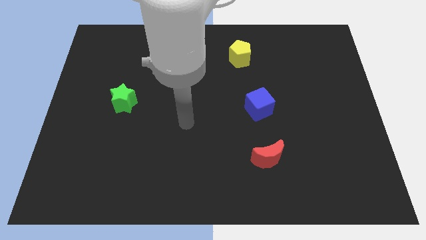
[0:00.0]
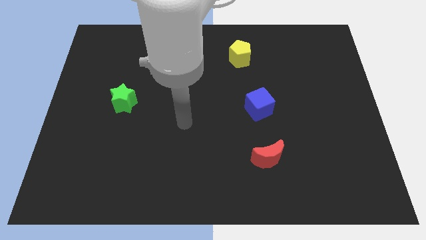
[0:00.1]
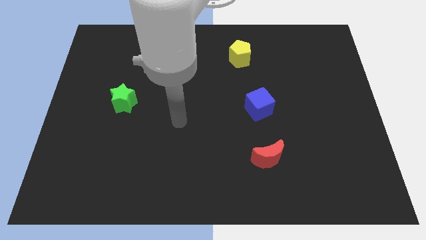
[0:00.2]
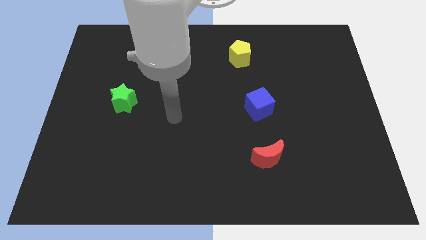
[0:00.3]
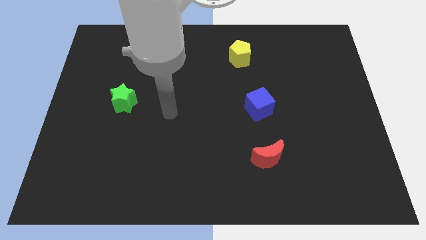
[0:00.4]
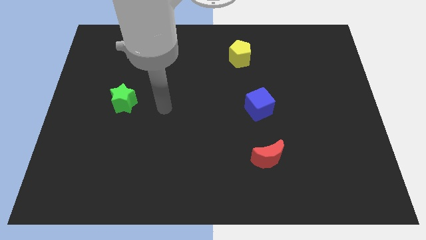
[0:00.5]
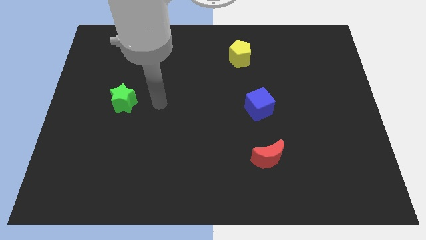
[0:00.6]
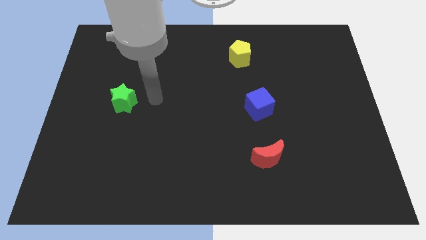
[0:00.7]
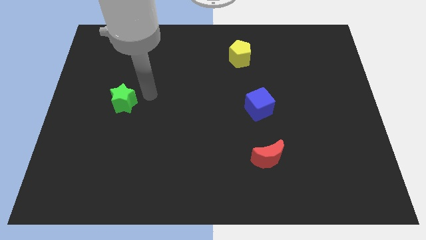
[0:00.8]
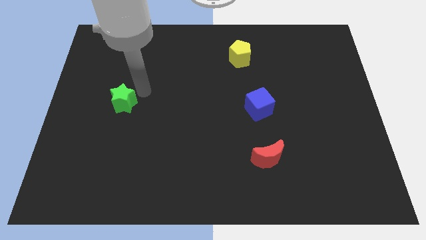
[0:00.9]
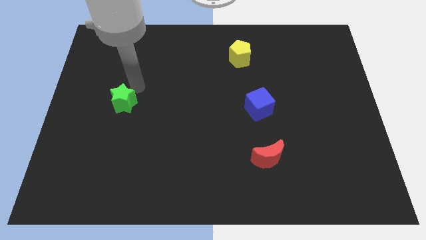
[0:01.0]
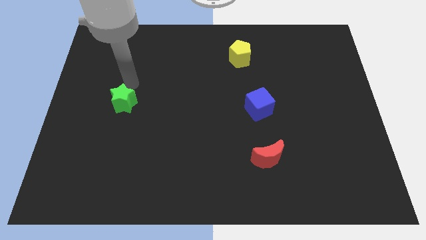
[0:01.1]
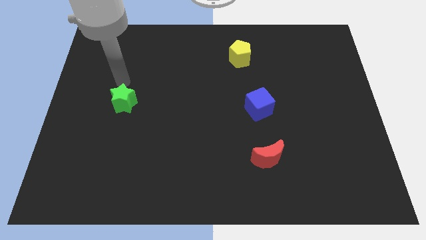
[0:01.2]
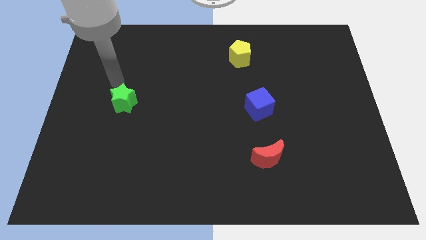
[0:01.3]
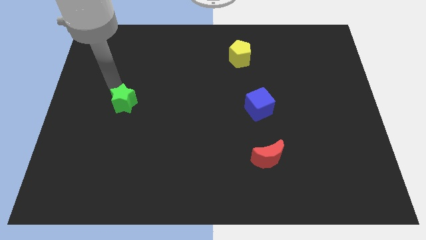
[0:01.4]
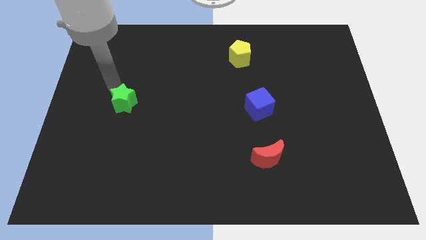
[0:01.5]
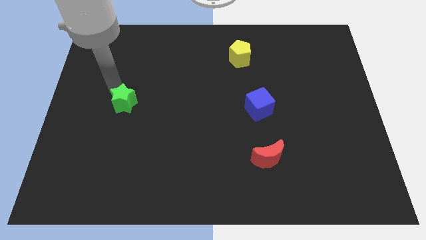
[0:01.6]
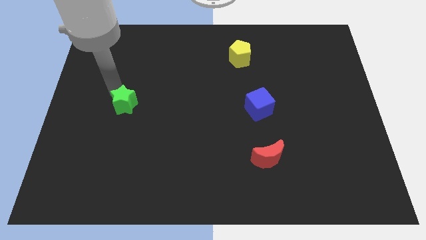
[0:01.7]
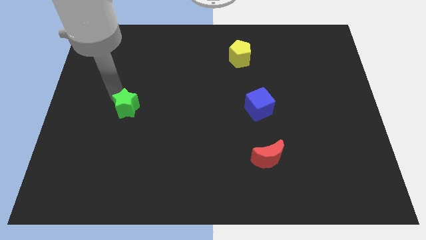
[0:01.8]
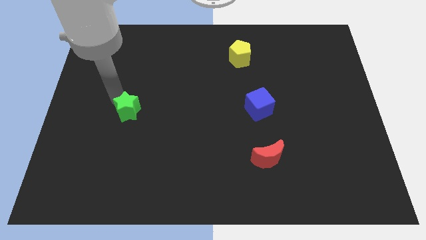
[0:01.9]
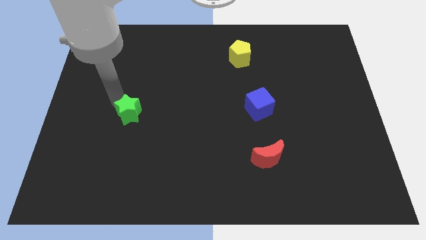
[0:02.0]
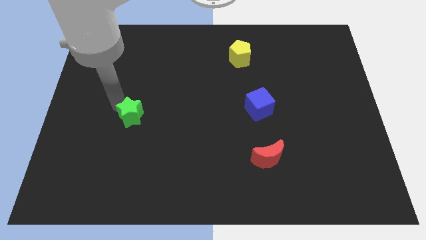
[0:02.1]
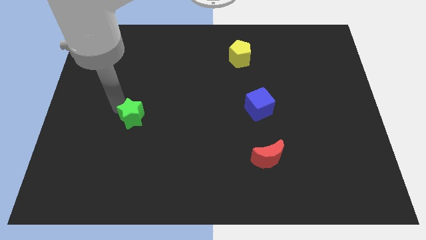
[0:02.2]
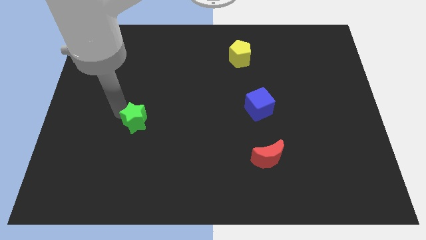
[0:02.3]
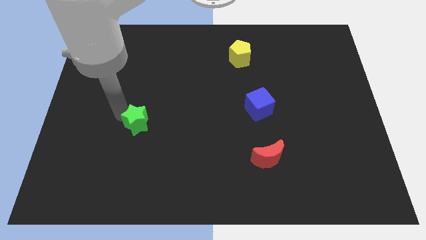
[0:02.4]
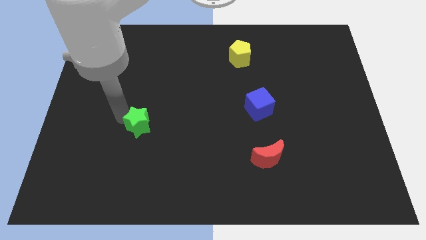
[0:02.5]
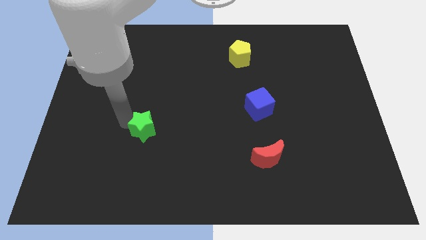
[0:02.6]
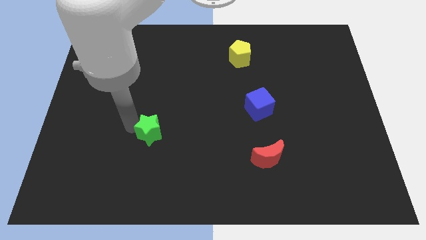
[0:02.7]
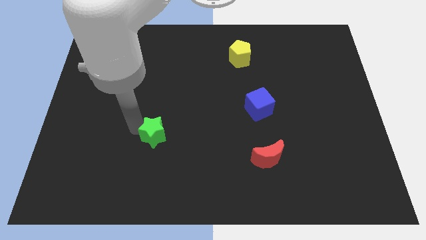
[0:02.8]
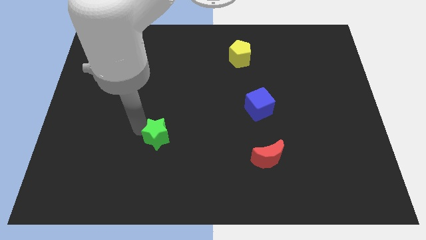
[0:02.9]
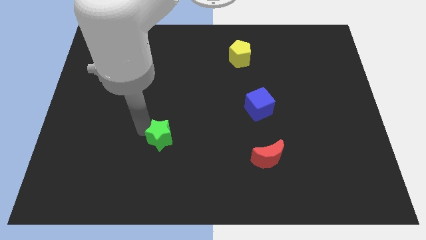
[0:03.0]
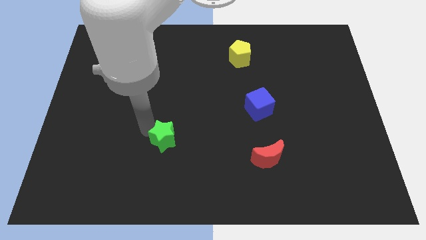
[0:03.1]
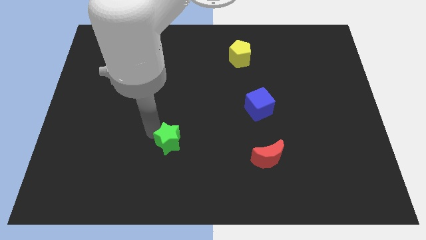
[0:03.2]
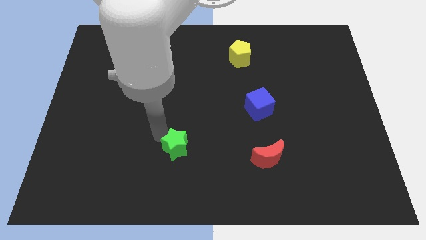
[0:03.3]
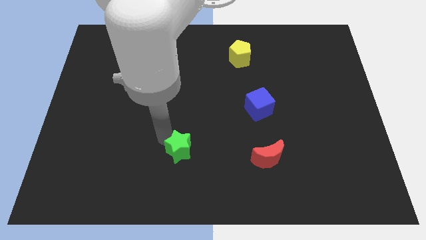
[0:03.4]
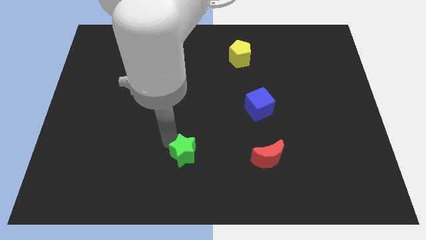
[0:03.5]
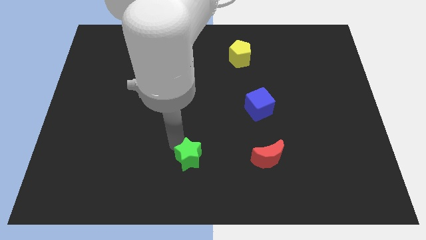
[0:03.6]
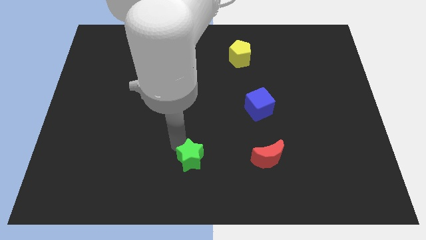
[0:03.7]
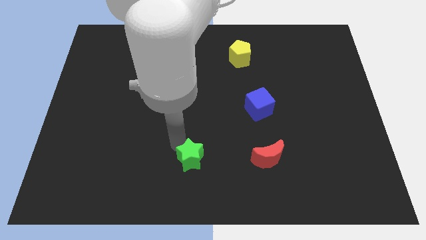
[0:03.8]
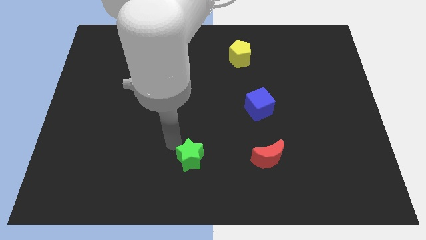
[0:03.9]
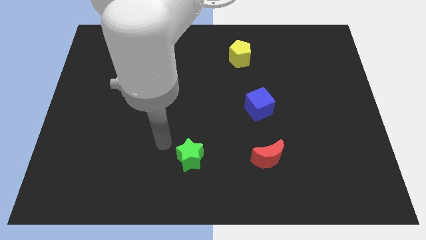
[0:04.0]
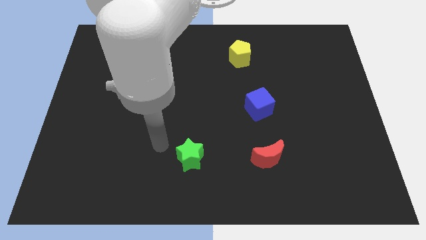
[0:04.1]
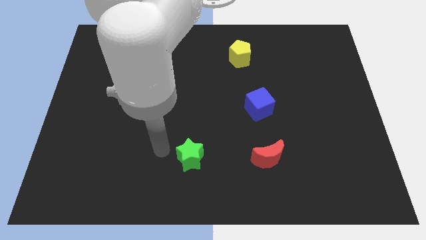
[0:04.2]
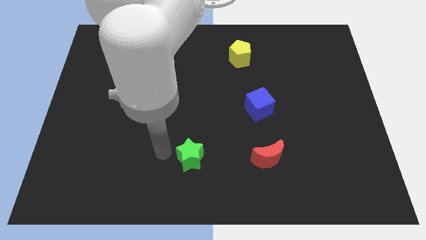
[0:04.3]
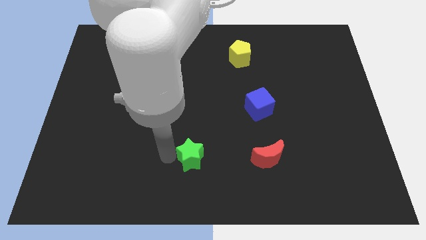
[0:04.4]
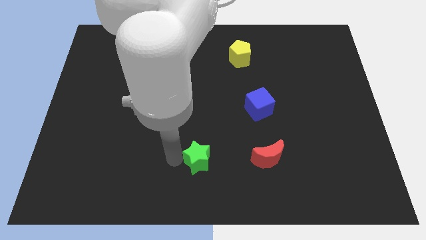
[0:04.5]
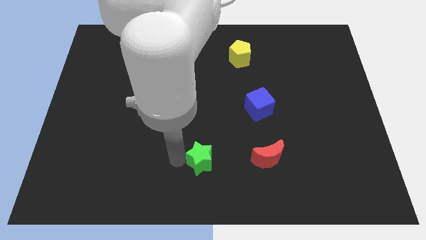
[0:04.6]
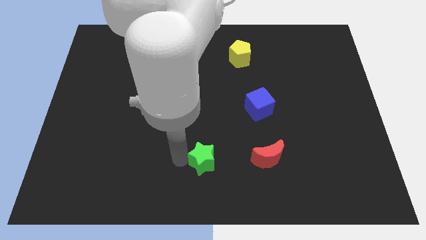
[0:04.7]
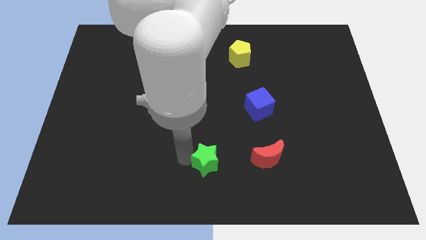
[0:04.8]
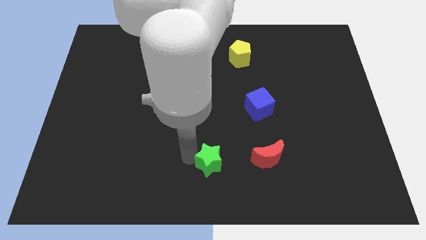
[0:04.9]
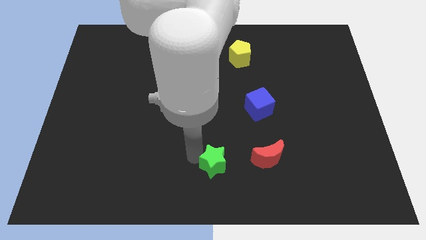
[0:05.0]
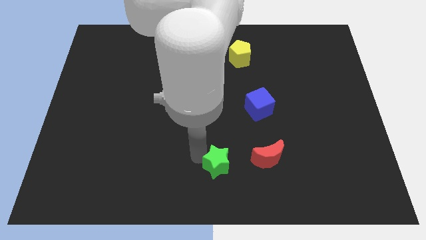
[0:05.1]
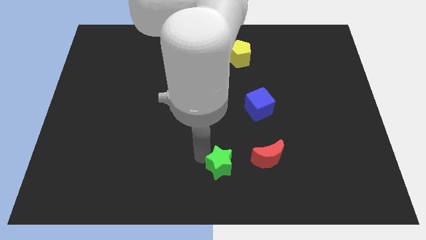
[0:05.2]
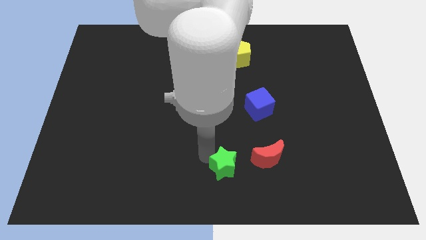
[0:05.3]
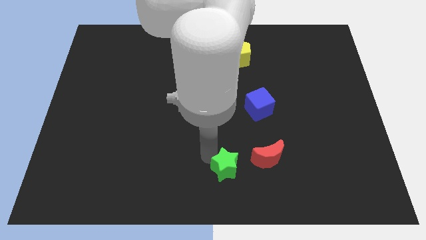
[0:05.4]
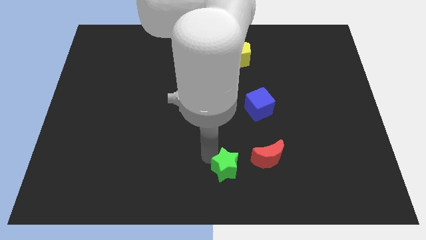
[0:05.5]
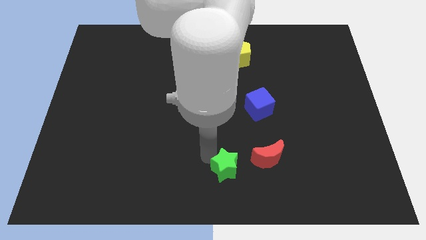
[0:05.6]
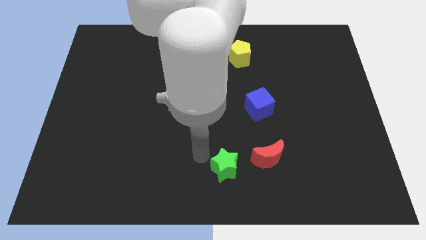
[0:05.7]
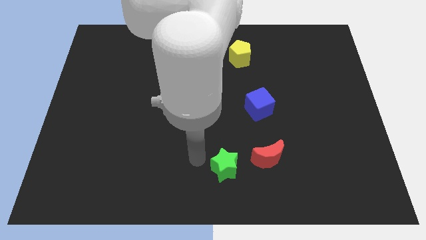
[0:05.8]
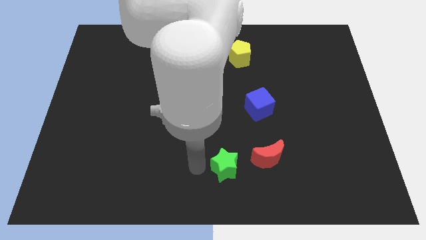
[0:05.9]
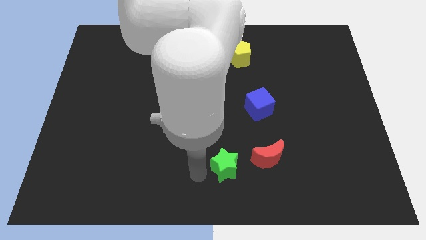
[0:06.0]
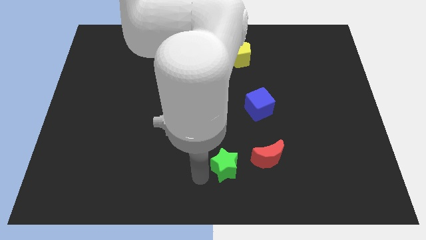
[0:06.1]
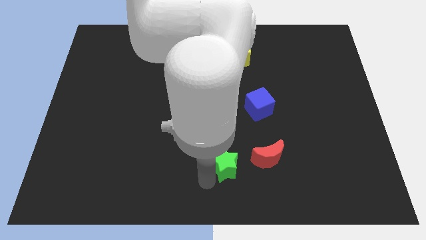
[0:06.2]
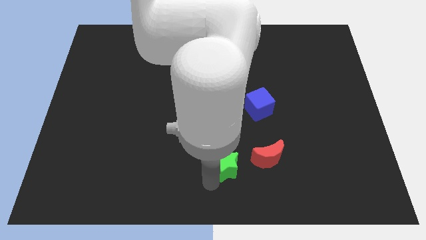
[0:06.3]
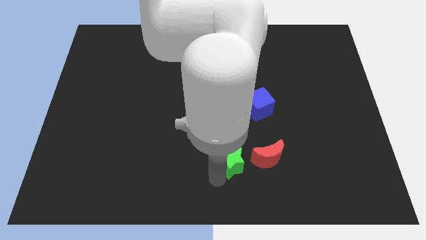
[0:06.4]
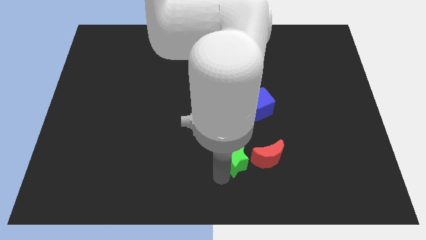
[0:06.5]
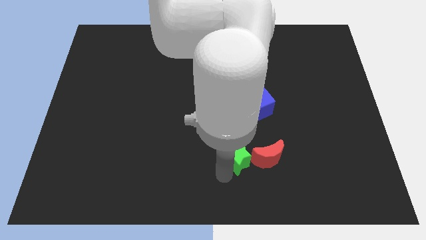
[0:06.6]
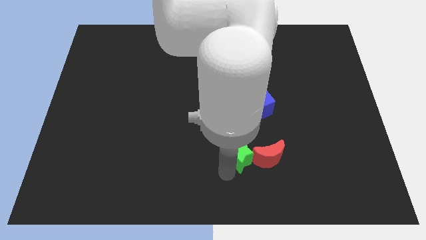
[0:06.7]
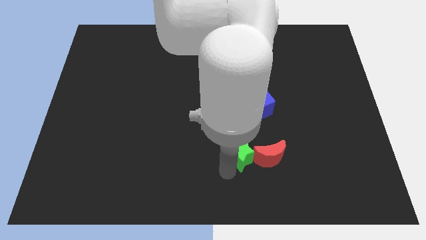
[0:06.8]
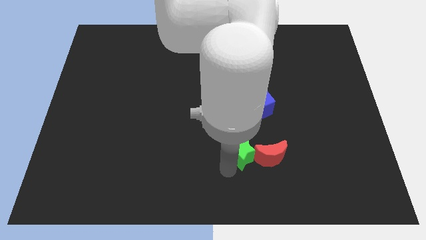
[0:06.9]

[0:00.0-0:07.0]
put the green star to the moon

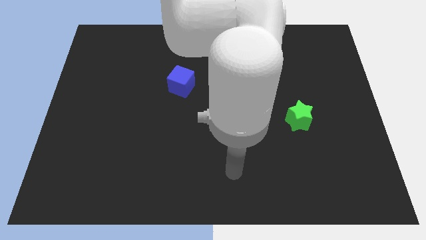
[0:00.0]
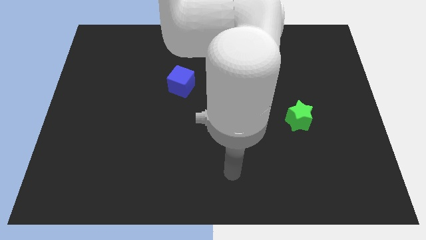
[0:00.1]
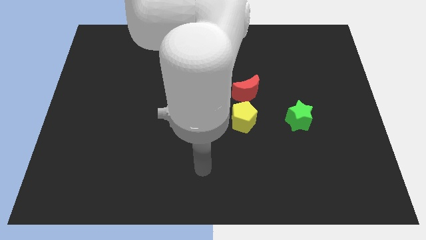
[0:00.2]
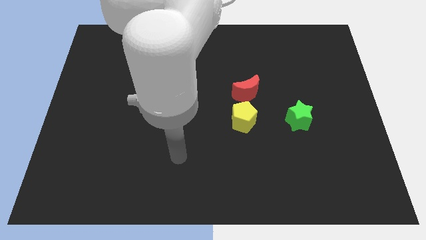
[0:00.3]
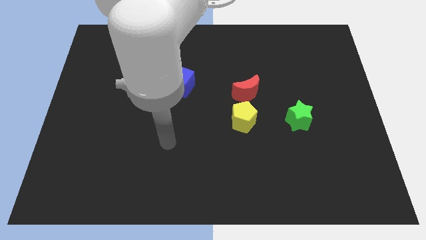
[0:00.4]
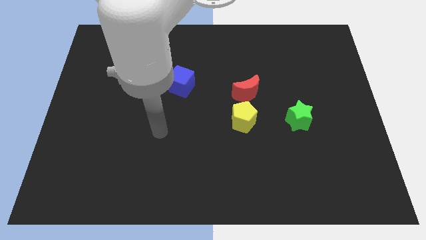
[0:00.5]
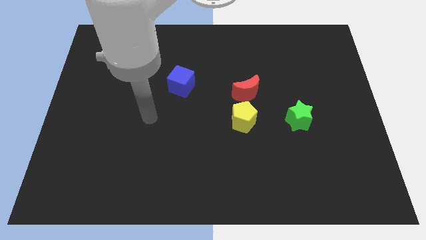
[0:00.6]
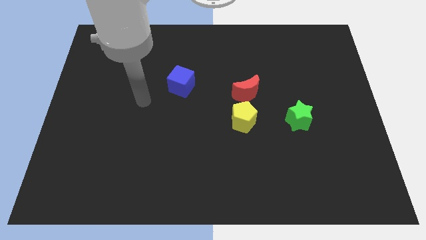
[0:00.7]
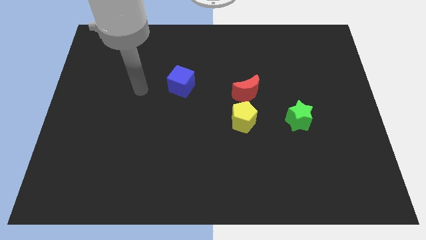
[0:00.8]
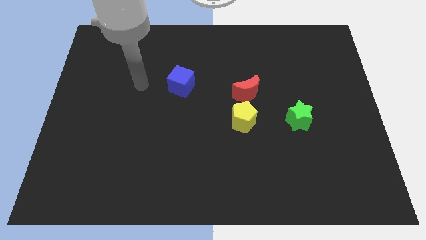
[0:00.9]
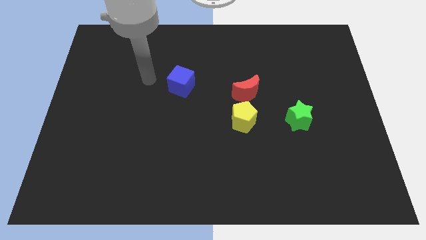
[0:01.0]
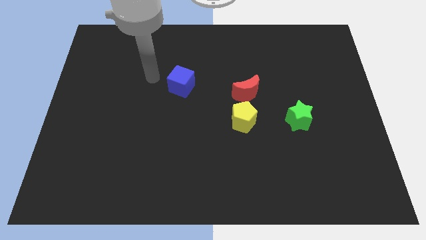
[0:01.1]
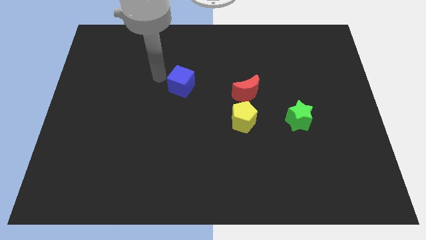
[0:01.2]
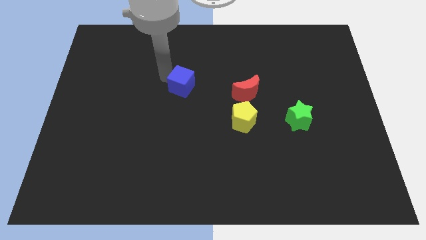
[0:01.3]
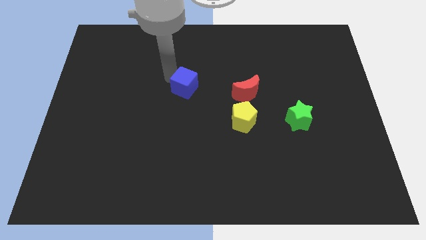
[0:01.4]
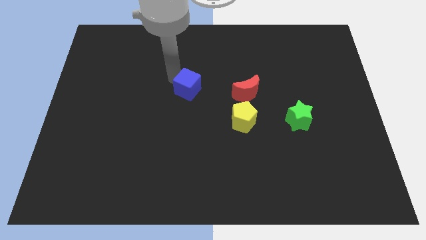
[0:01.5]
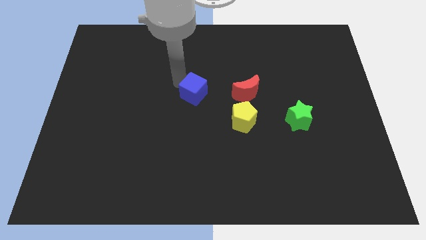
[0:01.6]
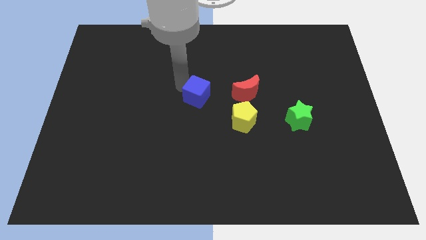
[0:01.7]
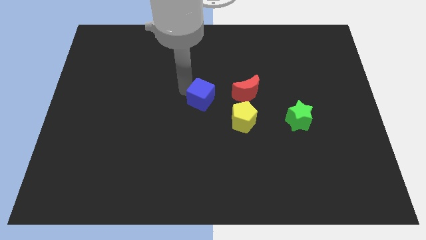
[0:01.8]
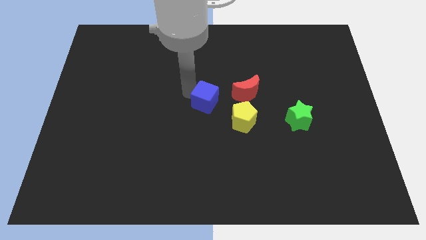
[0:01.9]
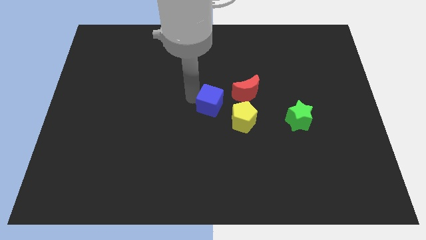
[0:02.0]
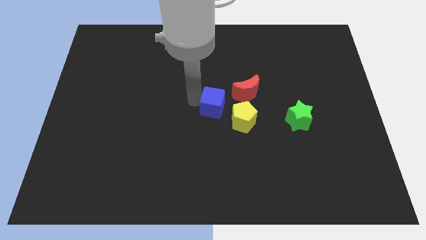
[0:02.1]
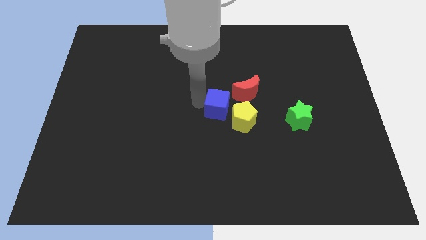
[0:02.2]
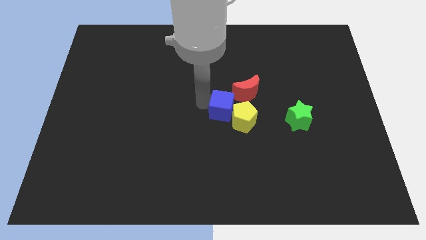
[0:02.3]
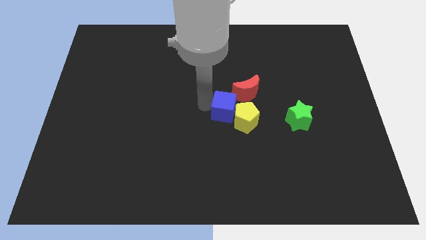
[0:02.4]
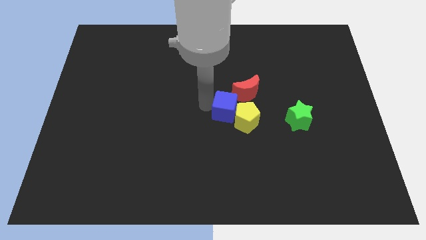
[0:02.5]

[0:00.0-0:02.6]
push the blue cube towards the pentagon
